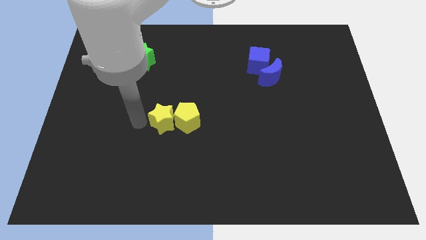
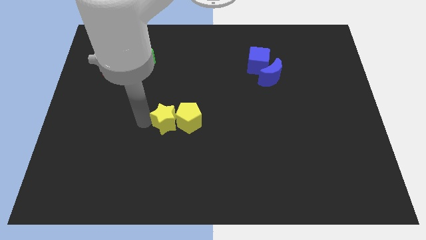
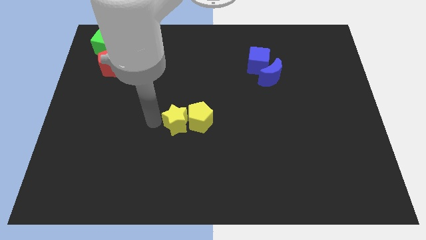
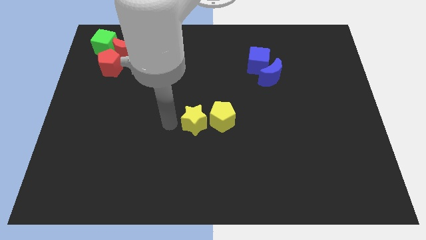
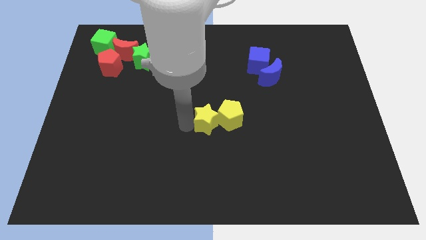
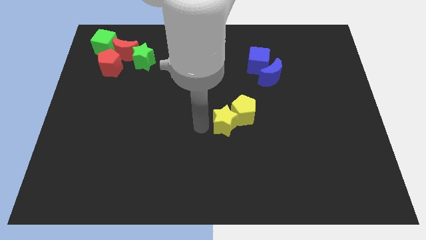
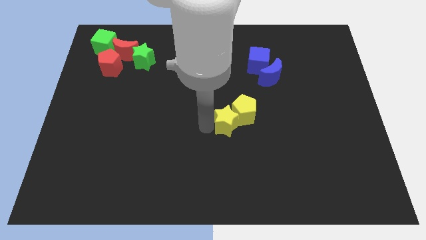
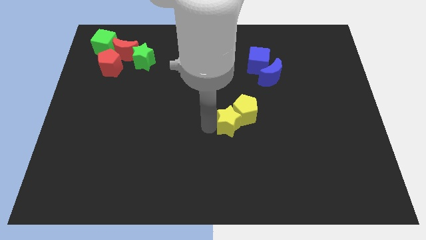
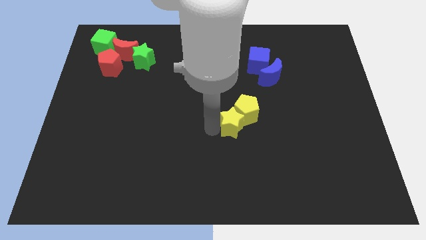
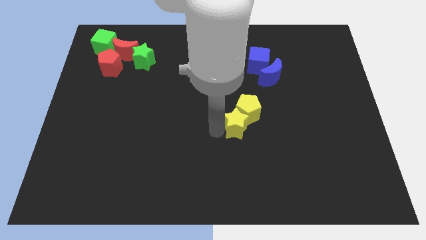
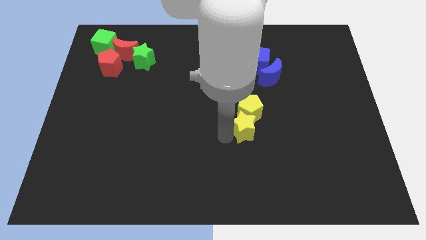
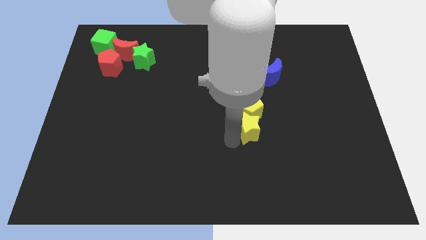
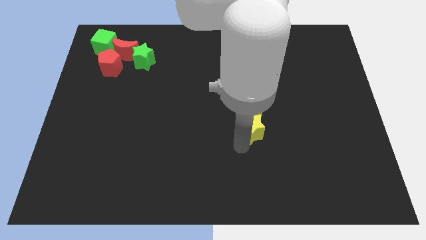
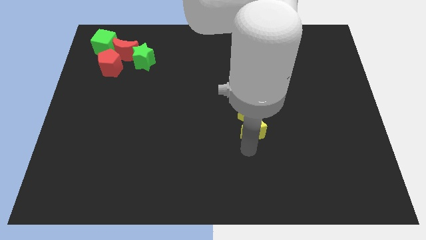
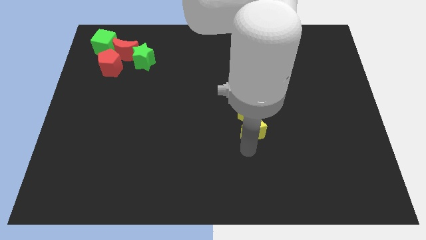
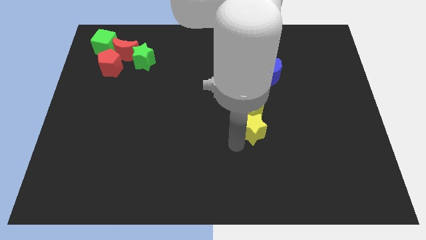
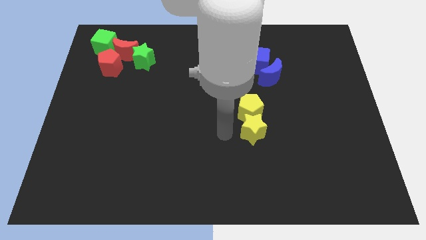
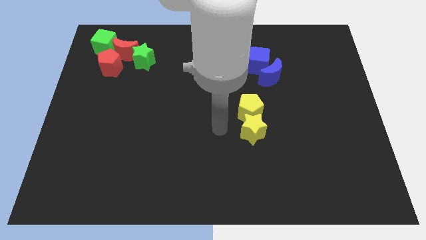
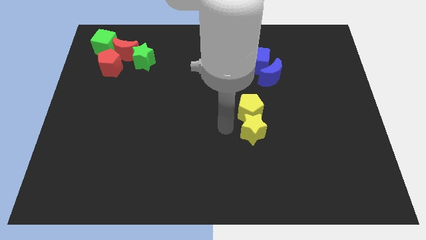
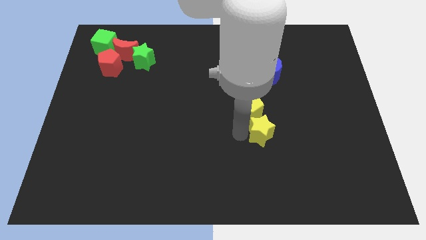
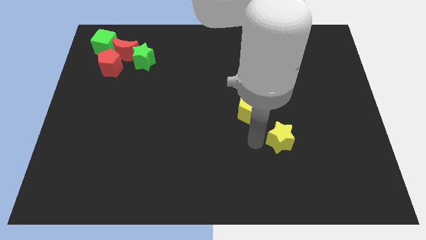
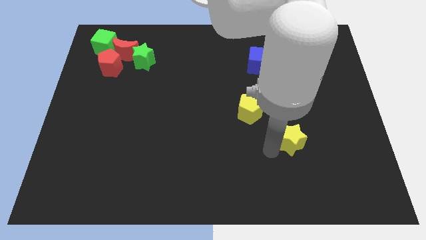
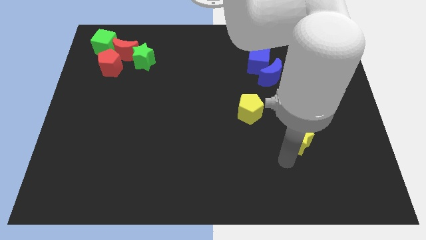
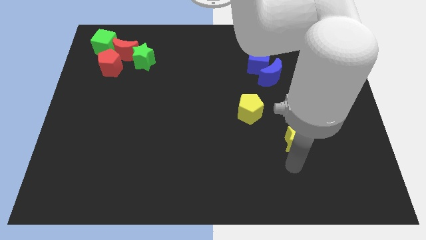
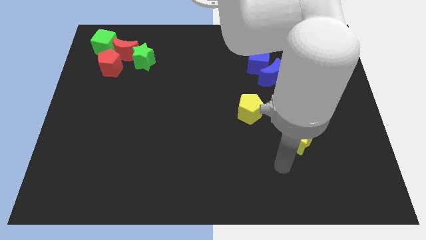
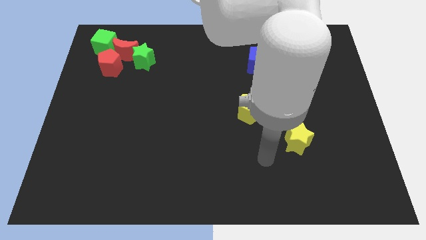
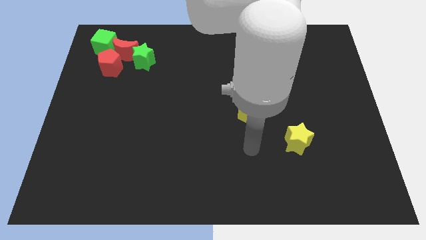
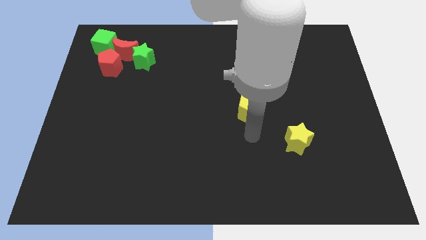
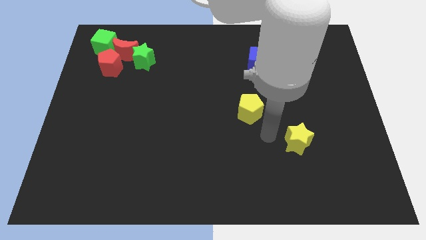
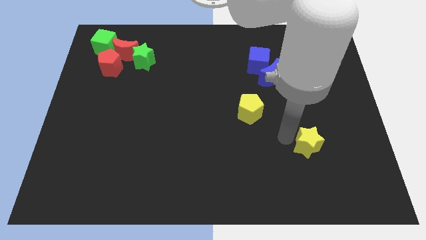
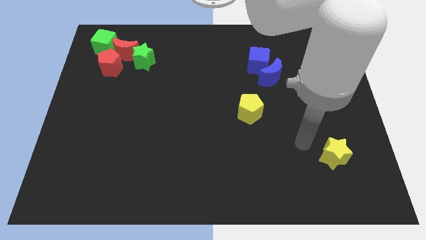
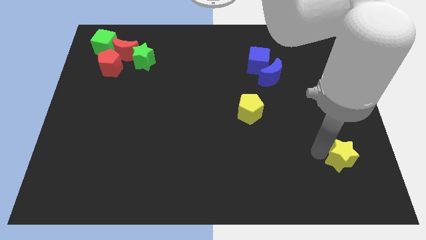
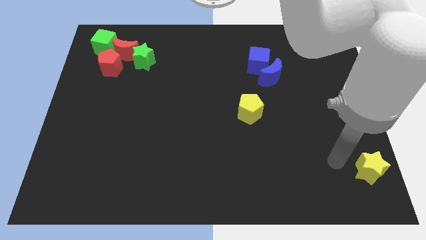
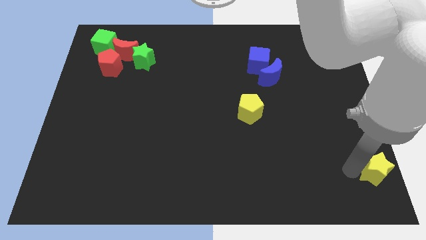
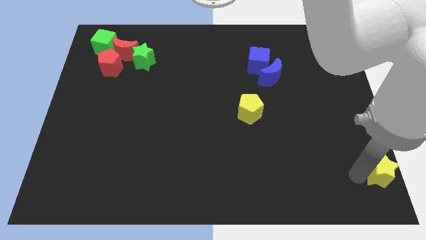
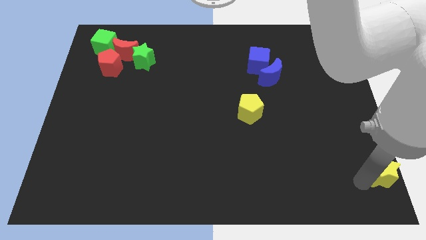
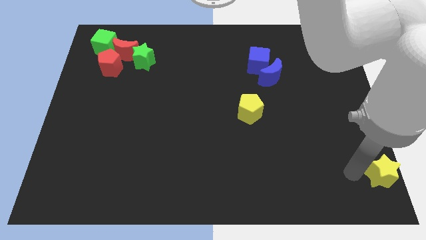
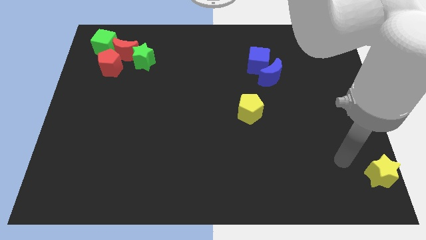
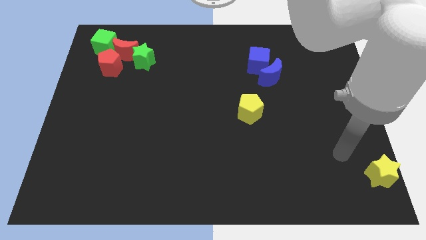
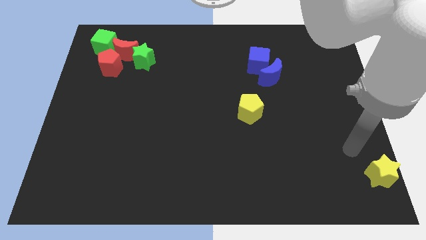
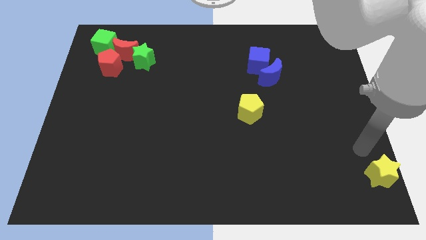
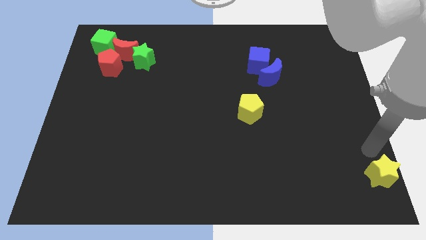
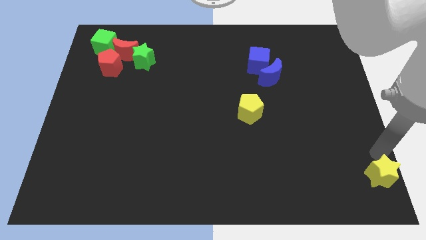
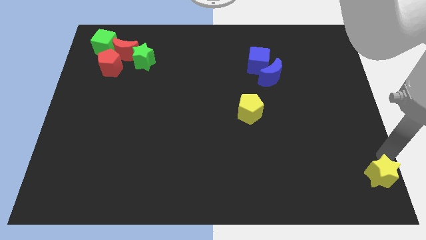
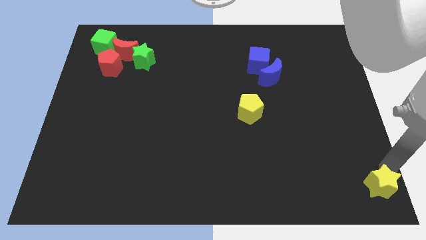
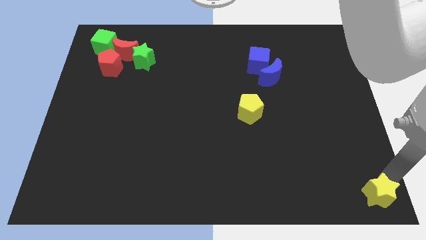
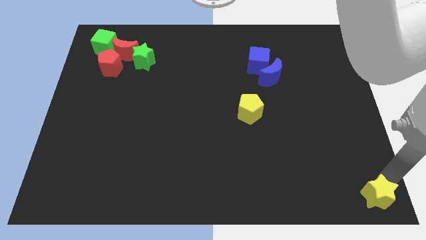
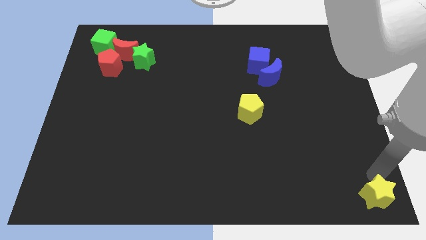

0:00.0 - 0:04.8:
place the yellow star to the bottom right of the board

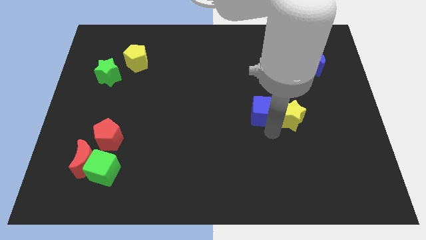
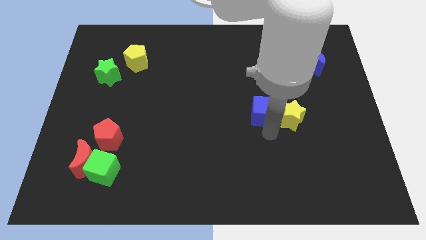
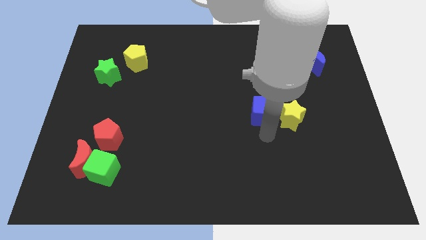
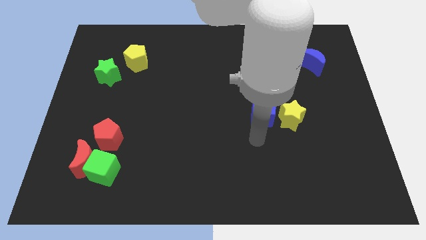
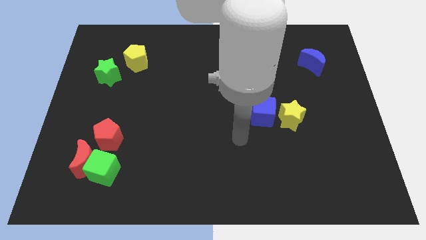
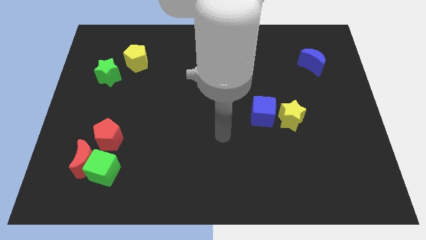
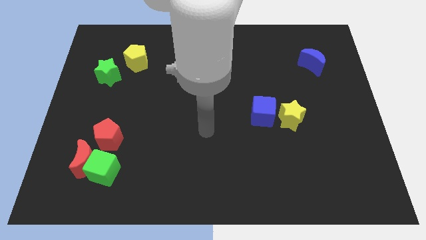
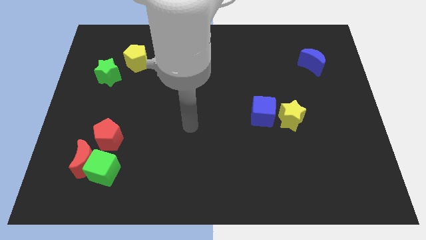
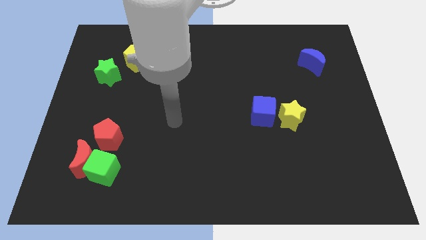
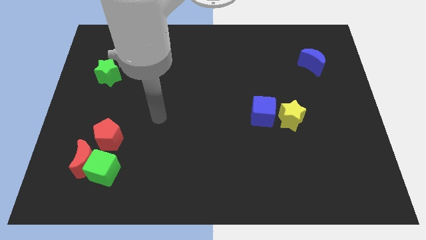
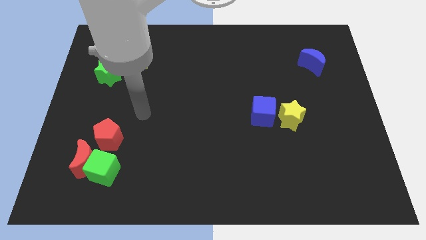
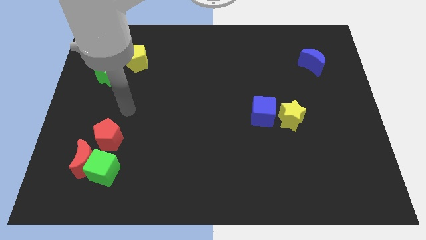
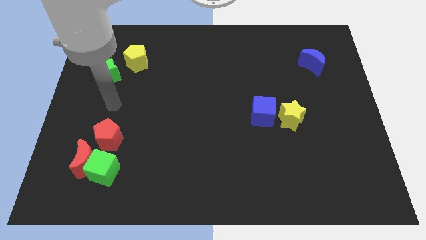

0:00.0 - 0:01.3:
move your hand above the red pentagon

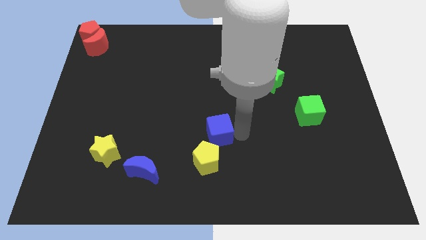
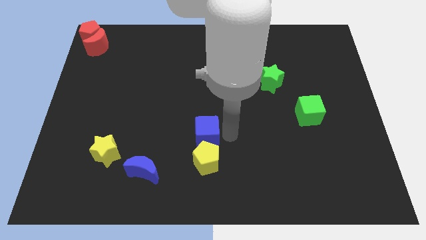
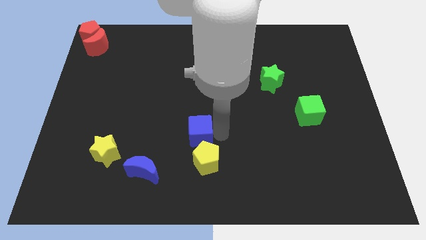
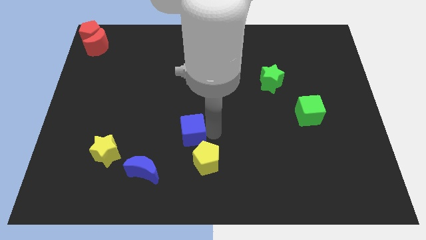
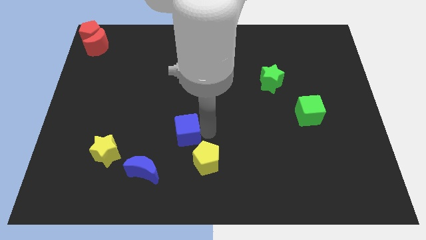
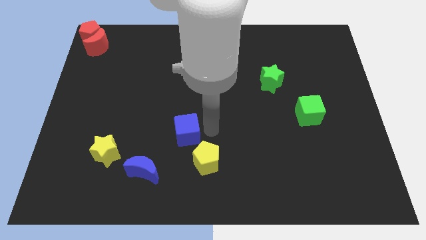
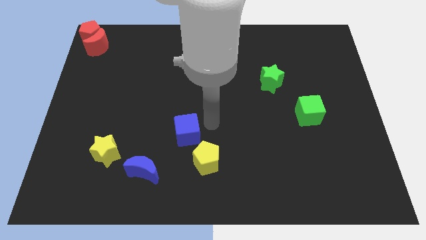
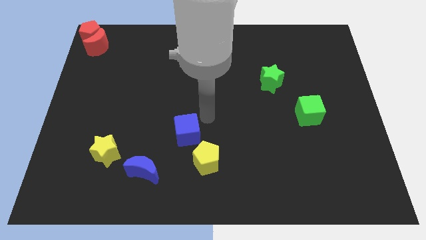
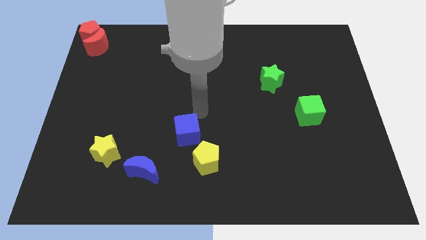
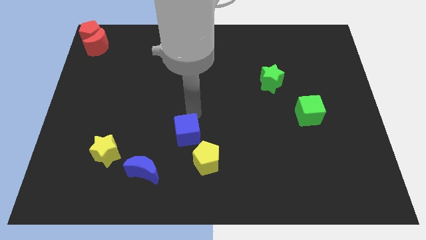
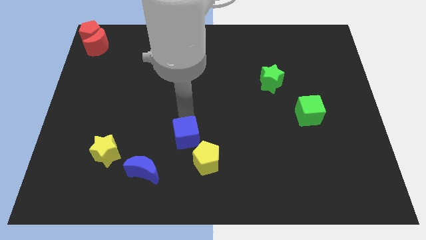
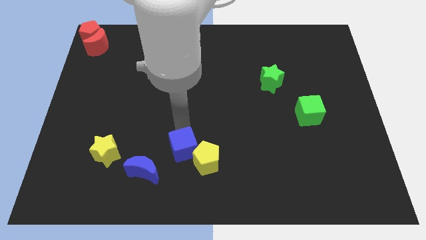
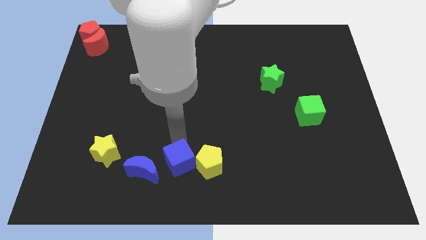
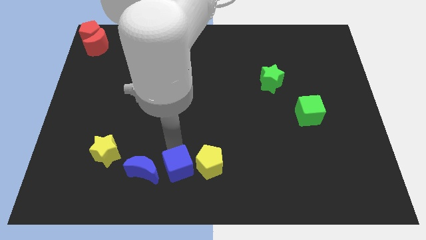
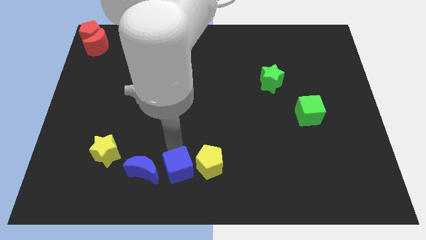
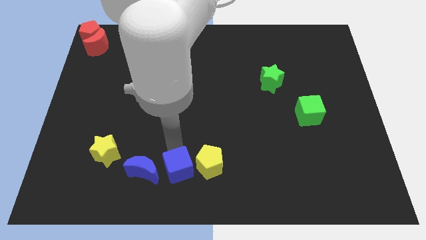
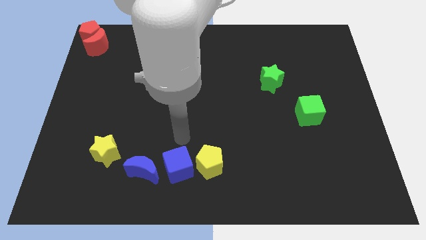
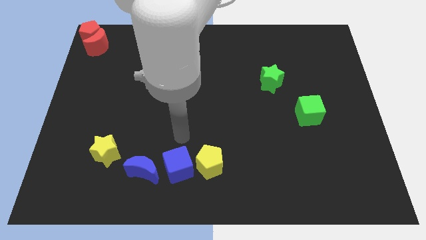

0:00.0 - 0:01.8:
place the blue cube in between yellow pentagon and blue moon

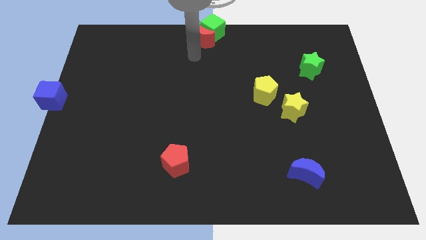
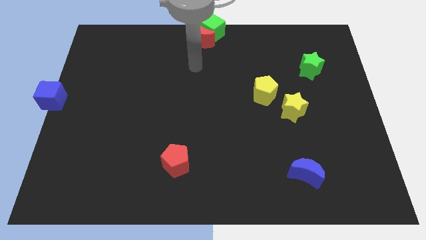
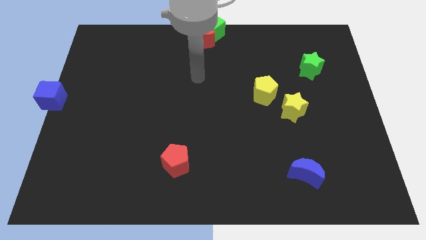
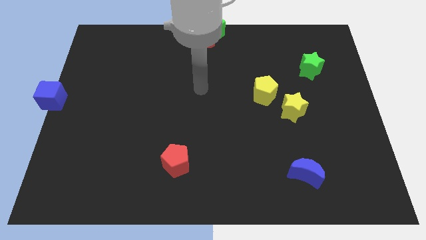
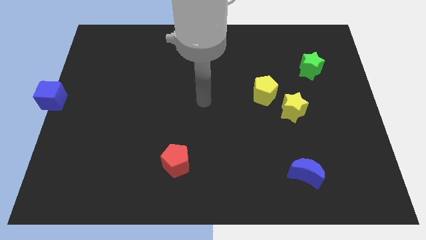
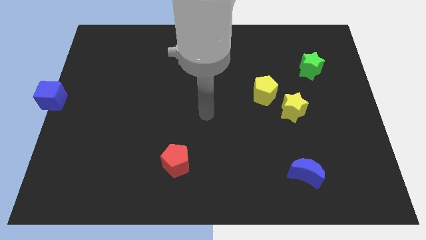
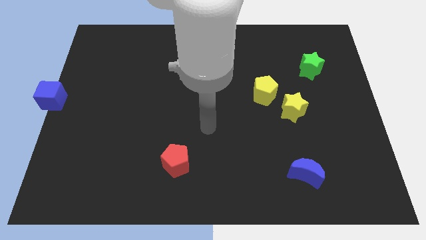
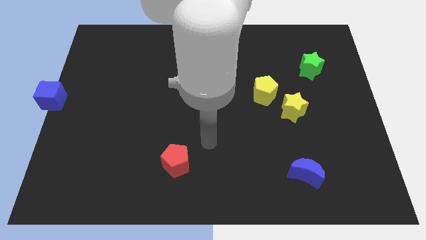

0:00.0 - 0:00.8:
move the arm away from the red crescent

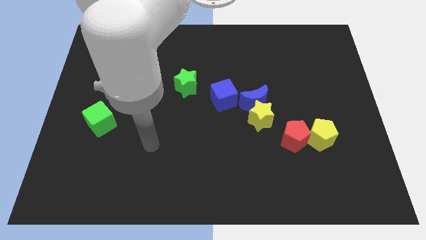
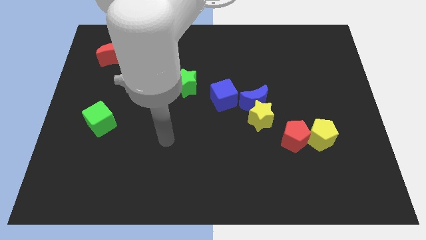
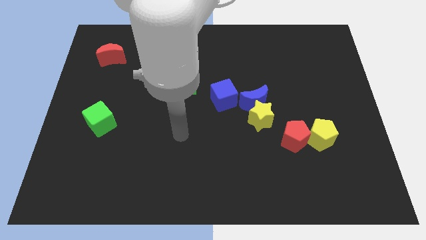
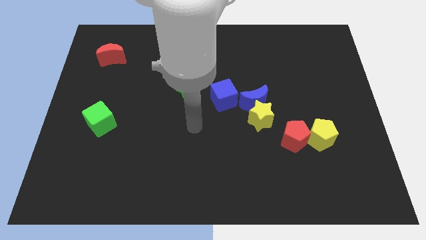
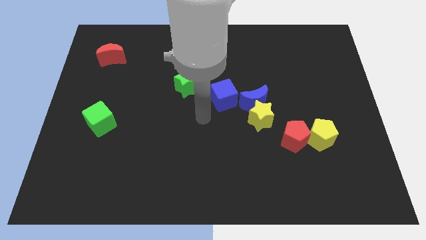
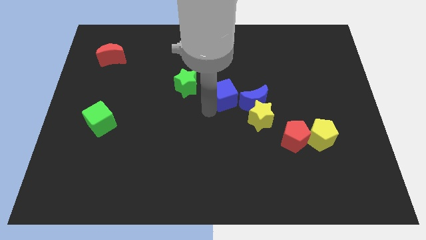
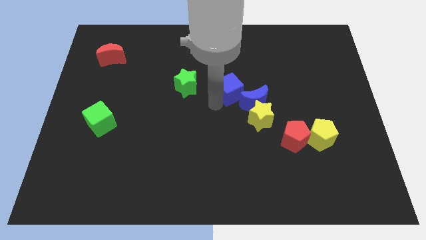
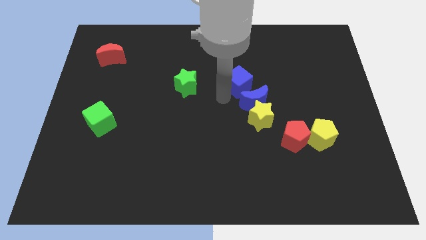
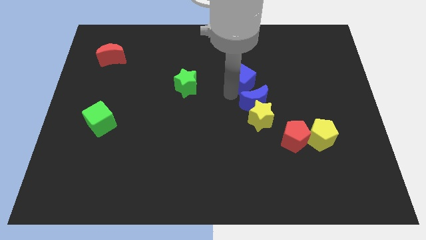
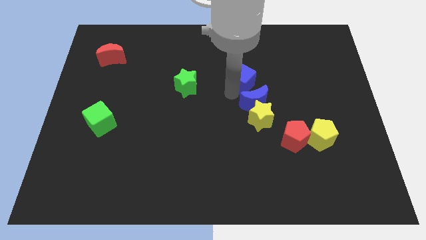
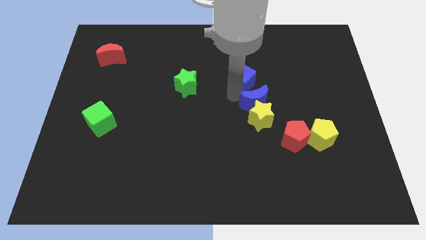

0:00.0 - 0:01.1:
place the blue cube to the top of the blue moon
